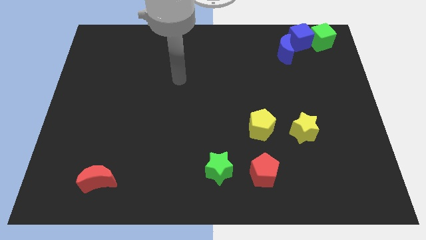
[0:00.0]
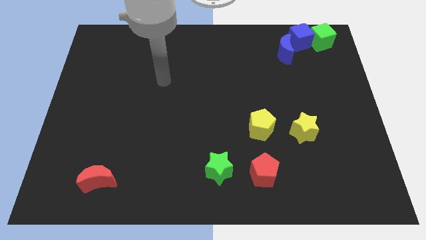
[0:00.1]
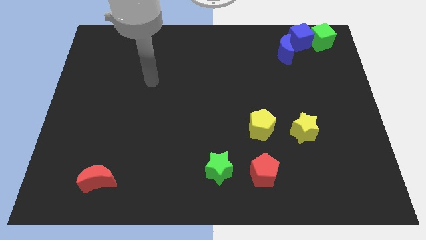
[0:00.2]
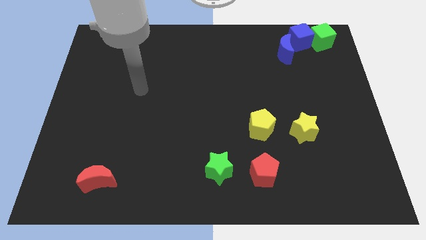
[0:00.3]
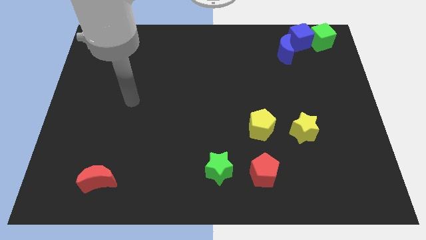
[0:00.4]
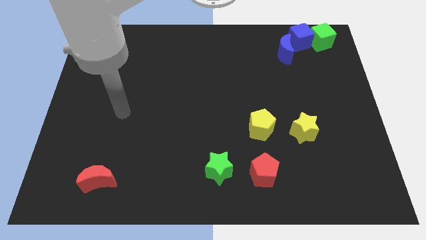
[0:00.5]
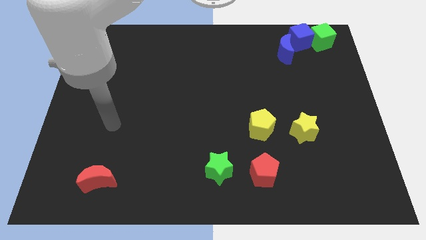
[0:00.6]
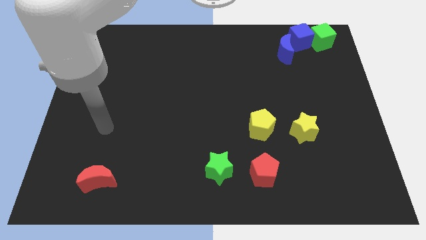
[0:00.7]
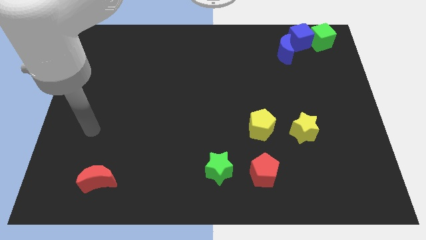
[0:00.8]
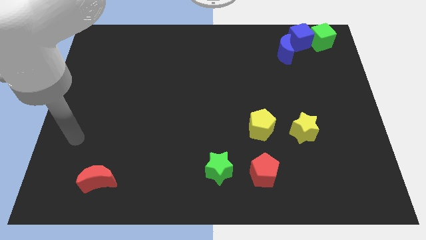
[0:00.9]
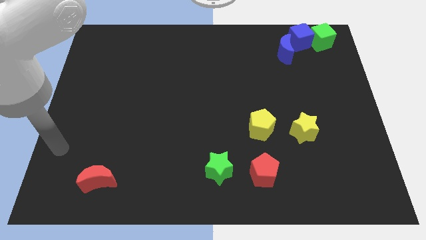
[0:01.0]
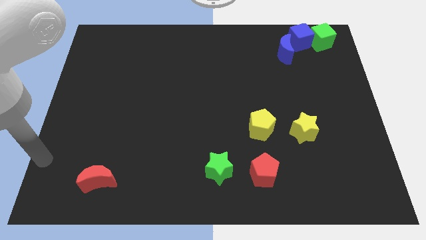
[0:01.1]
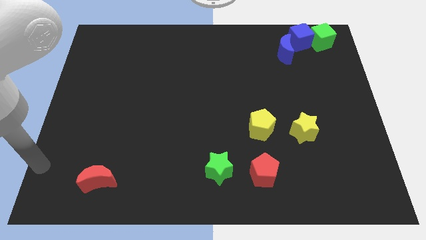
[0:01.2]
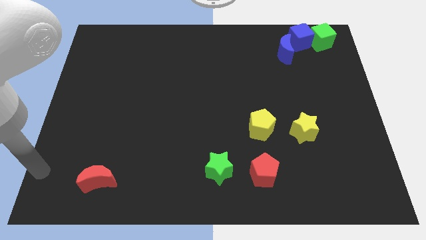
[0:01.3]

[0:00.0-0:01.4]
place the arm to the left bottom of board

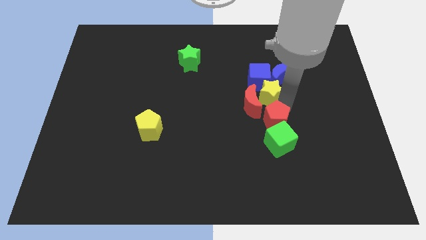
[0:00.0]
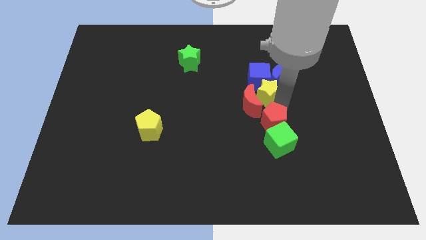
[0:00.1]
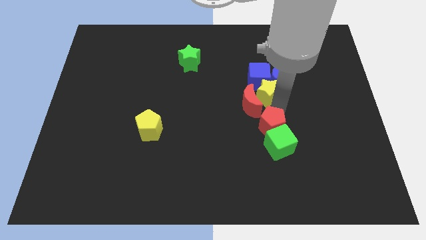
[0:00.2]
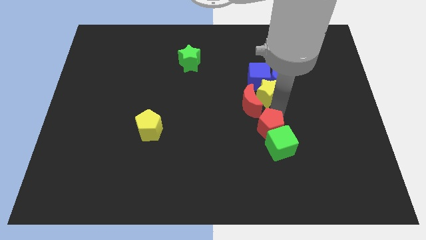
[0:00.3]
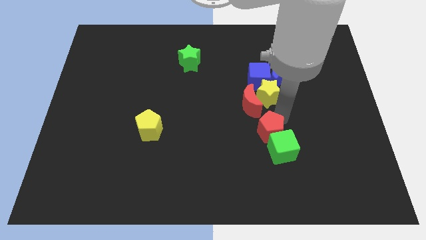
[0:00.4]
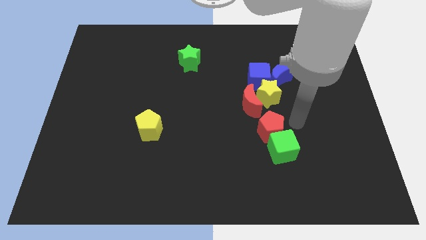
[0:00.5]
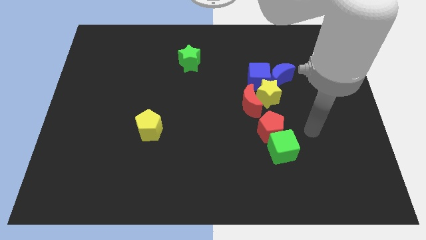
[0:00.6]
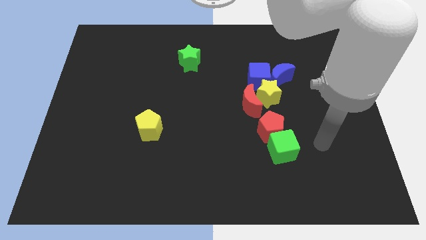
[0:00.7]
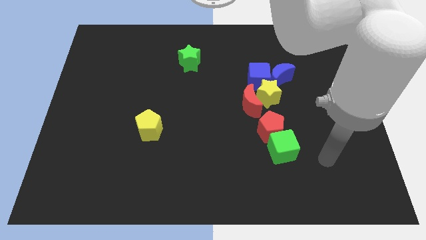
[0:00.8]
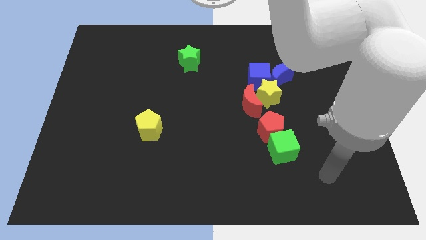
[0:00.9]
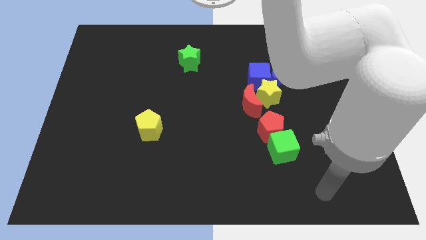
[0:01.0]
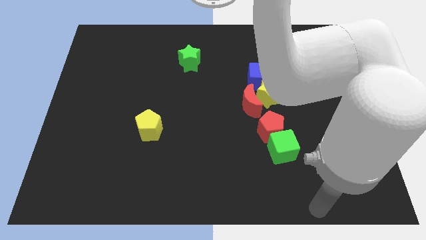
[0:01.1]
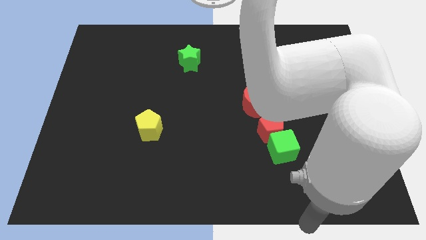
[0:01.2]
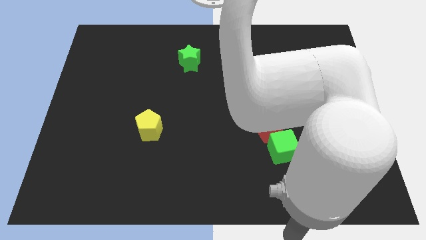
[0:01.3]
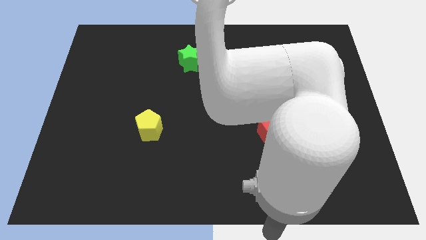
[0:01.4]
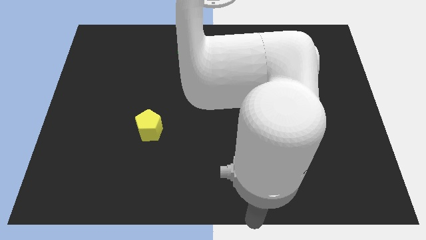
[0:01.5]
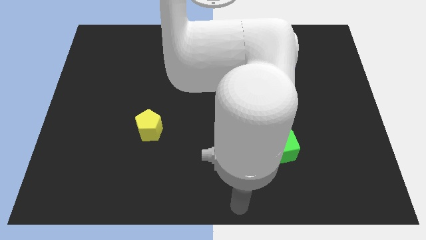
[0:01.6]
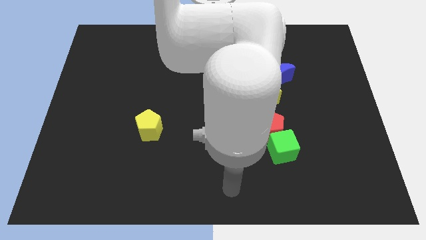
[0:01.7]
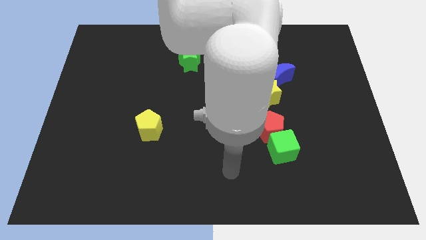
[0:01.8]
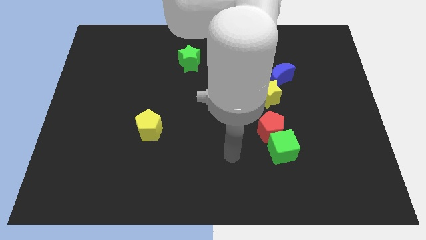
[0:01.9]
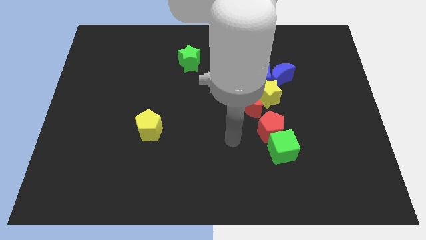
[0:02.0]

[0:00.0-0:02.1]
move your arm towards the red pentagon

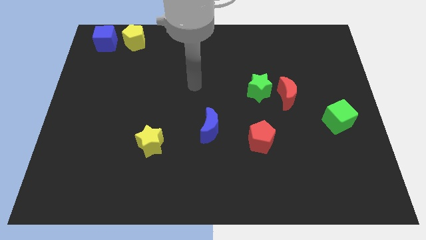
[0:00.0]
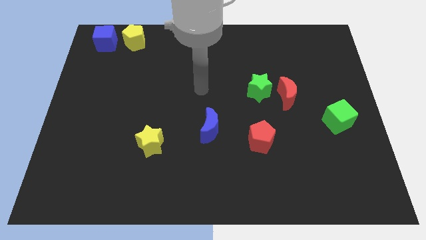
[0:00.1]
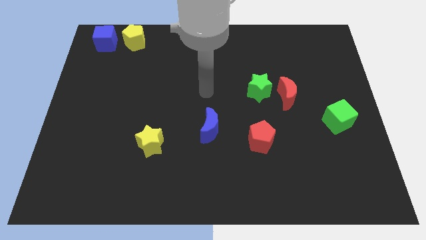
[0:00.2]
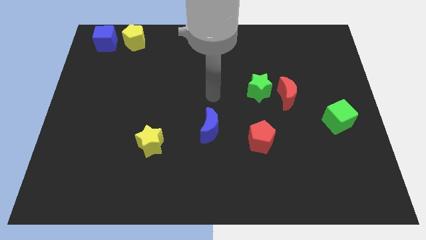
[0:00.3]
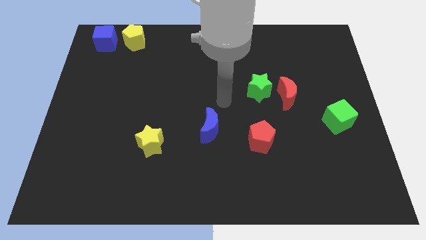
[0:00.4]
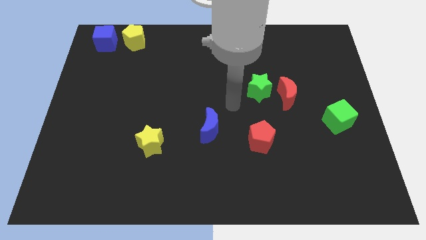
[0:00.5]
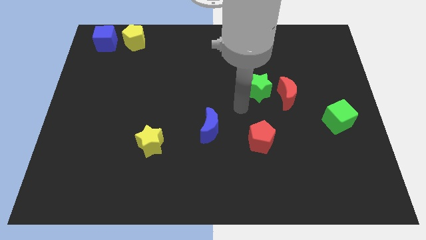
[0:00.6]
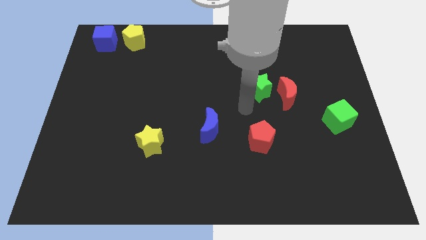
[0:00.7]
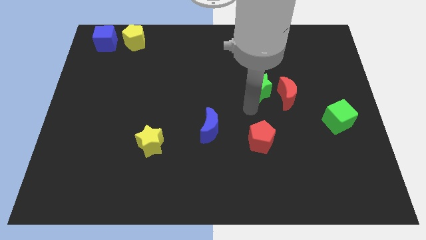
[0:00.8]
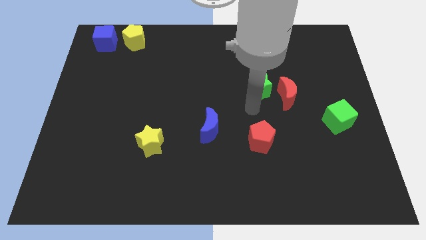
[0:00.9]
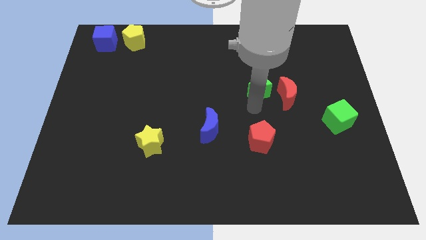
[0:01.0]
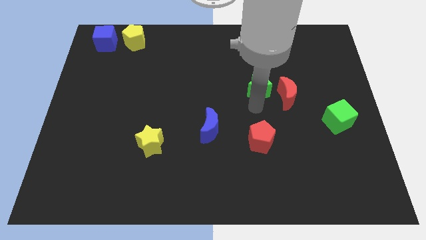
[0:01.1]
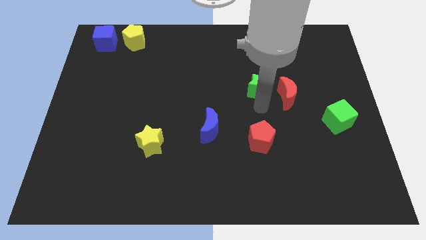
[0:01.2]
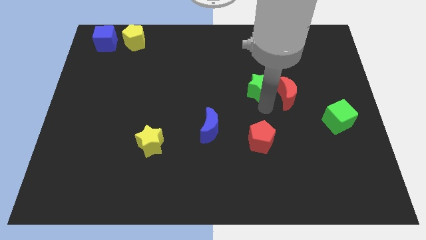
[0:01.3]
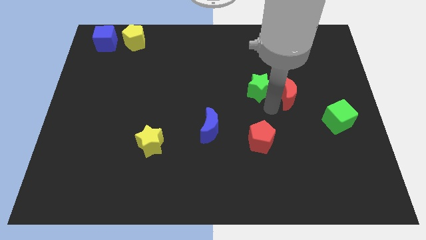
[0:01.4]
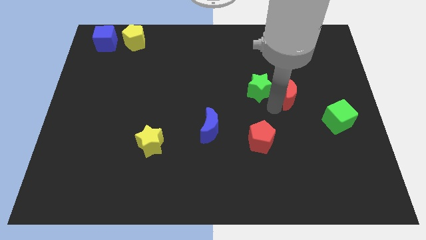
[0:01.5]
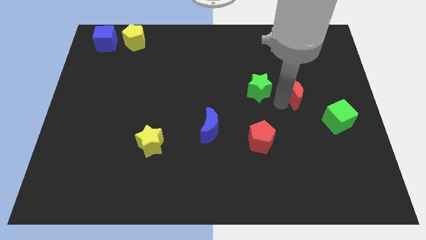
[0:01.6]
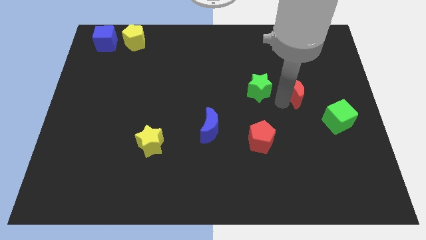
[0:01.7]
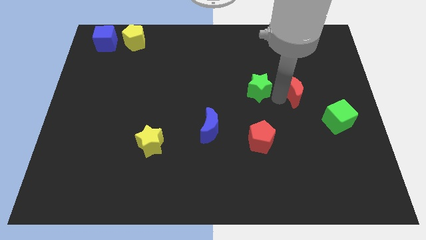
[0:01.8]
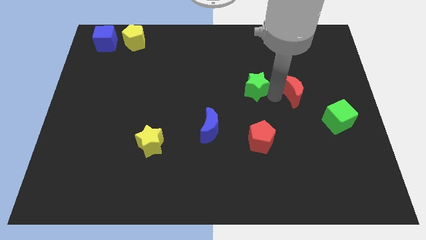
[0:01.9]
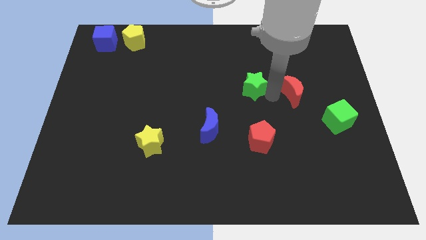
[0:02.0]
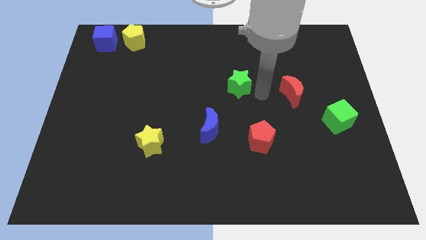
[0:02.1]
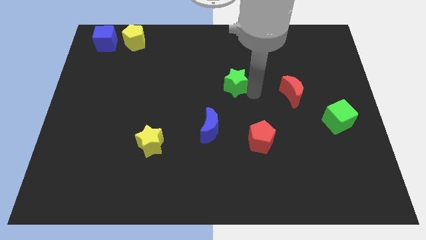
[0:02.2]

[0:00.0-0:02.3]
push the green star to the left

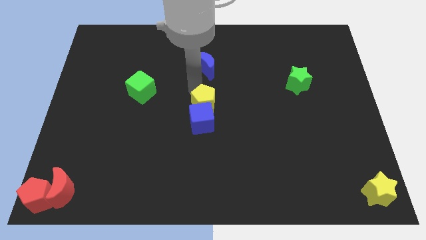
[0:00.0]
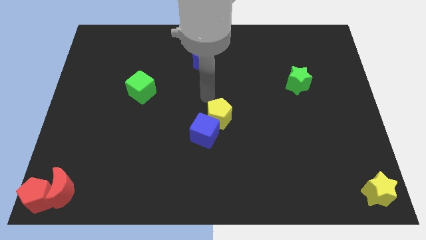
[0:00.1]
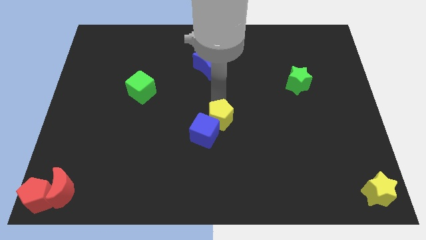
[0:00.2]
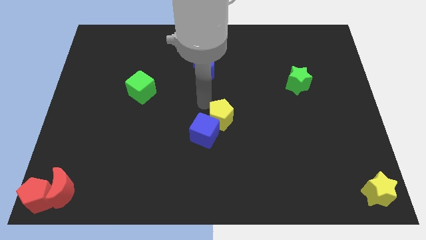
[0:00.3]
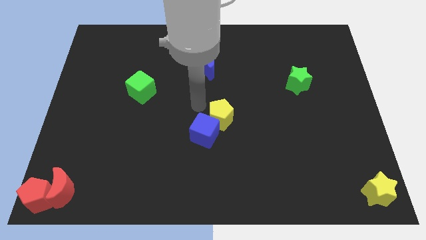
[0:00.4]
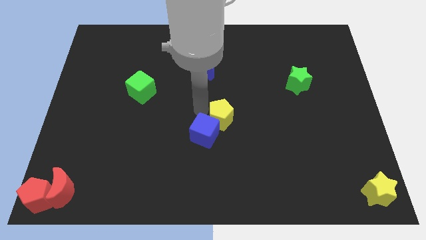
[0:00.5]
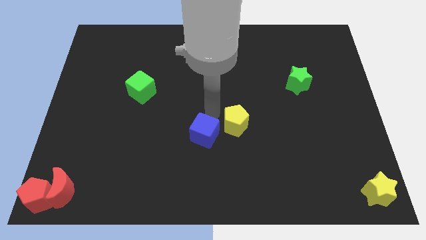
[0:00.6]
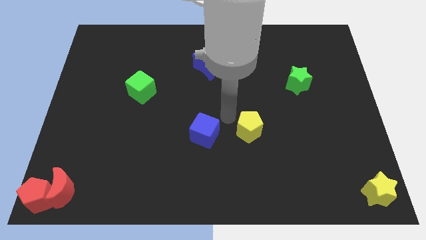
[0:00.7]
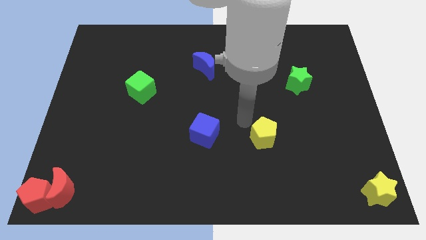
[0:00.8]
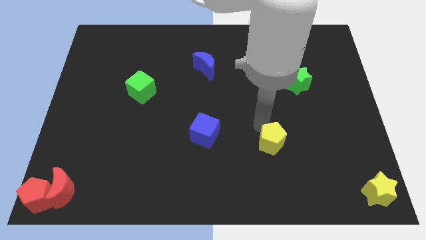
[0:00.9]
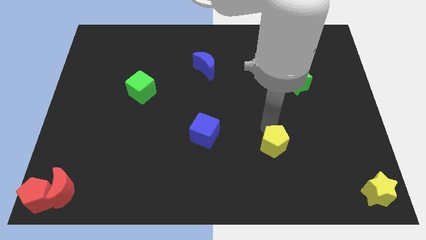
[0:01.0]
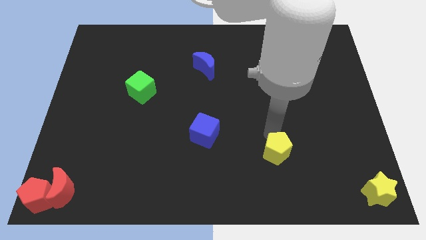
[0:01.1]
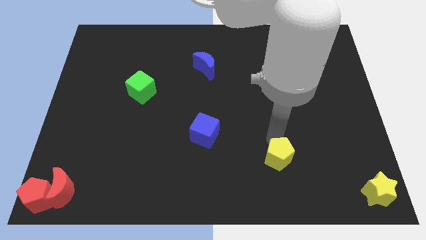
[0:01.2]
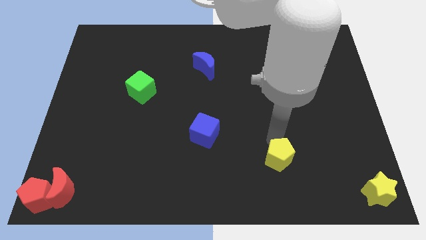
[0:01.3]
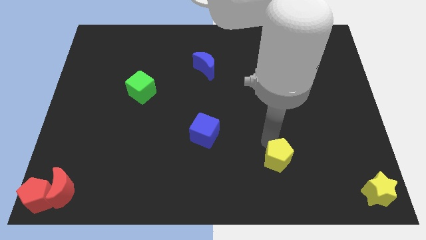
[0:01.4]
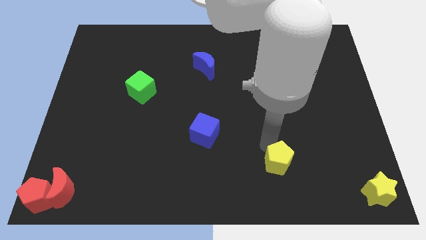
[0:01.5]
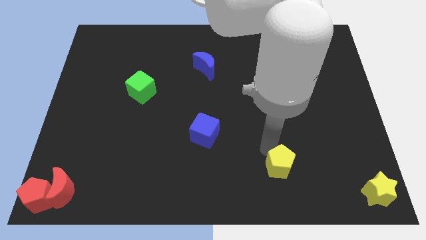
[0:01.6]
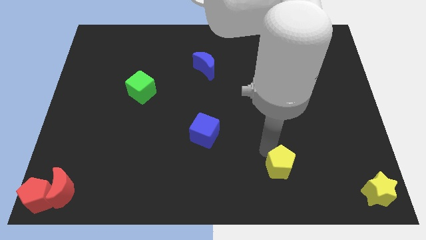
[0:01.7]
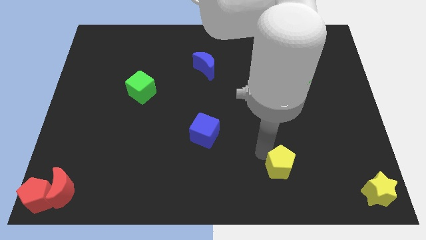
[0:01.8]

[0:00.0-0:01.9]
separate yellow pentagon from the blue cube

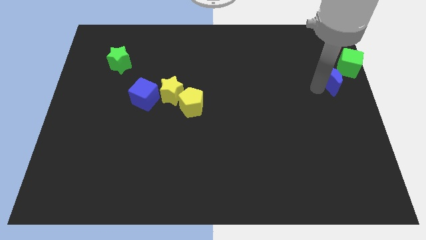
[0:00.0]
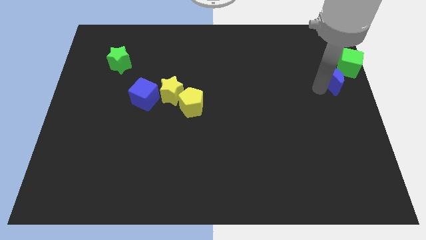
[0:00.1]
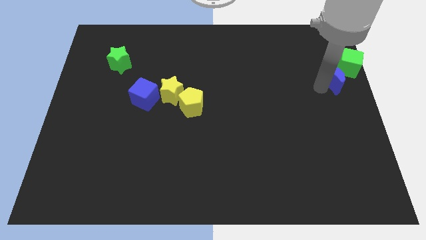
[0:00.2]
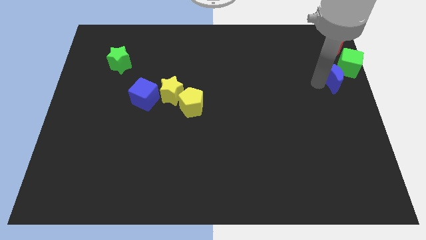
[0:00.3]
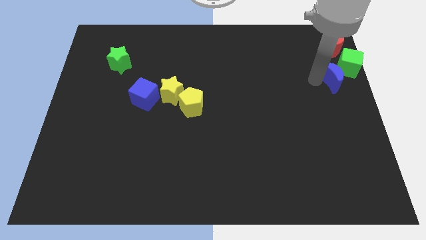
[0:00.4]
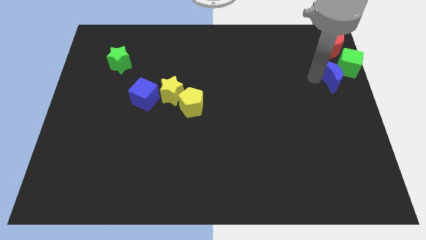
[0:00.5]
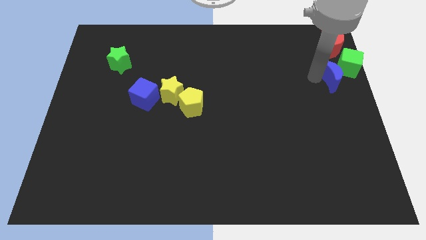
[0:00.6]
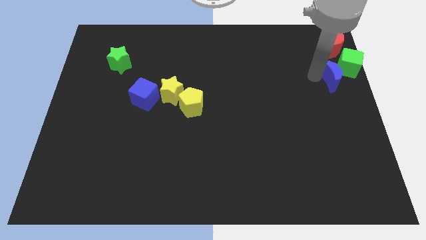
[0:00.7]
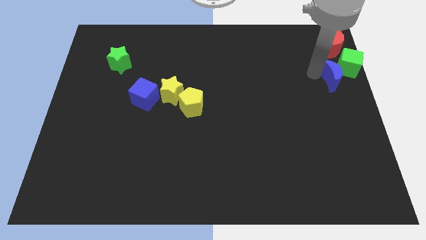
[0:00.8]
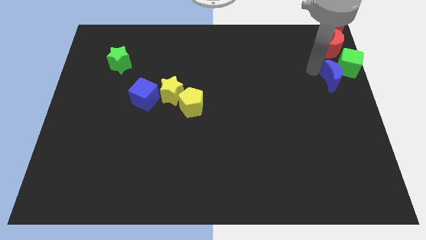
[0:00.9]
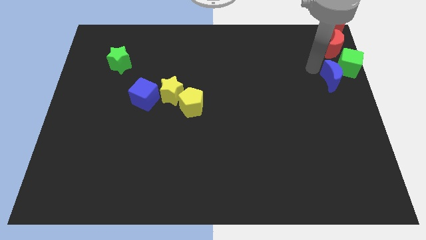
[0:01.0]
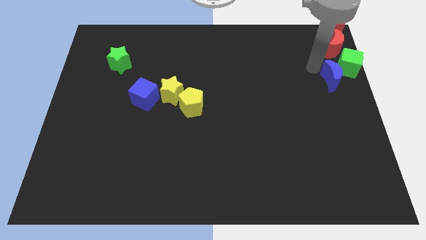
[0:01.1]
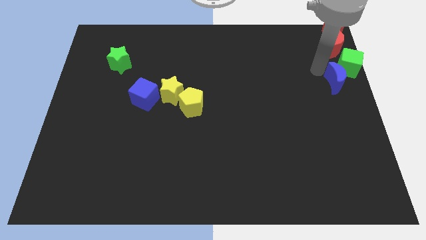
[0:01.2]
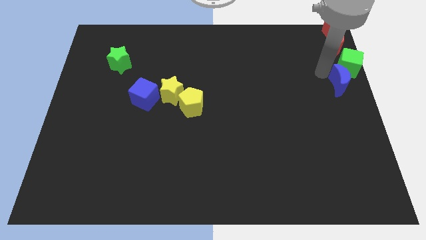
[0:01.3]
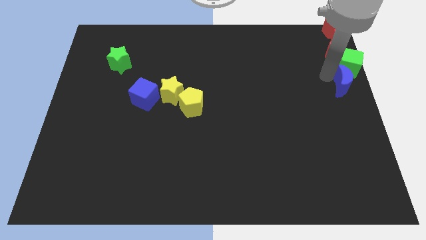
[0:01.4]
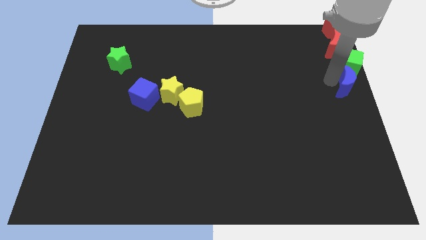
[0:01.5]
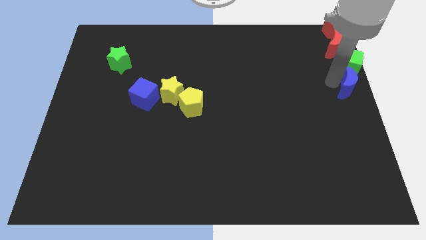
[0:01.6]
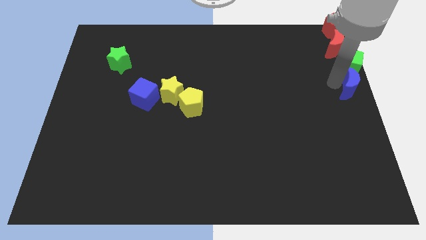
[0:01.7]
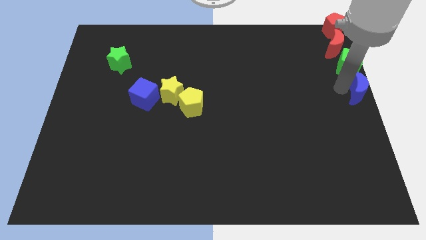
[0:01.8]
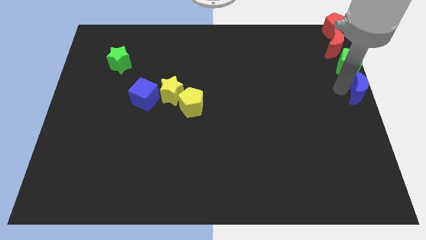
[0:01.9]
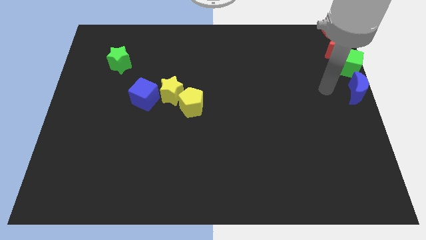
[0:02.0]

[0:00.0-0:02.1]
place the blue moon below the green cube
